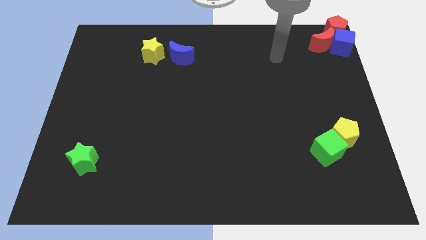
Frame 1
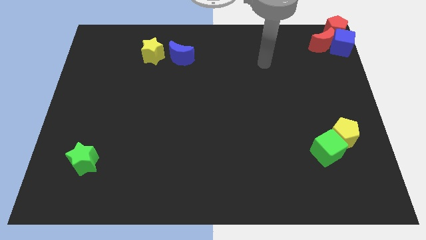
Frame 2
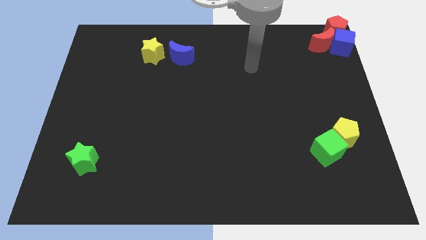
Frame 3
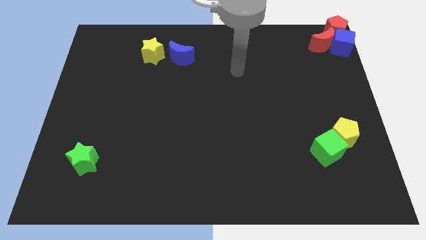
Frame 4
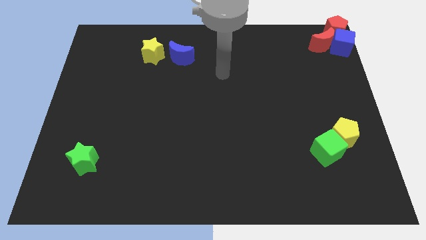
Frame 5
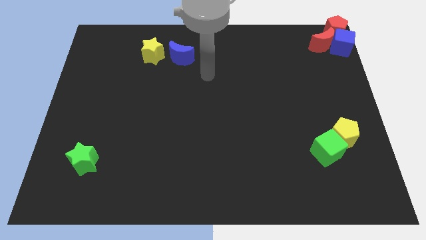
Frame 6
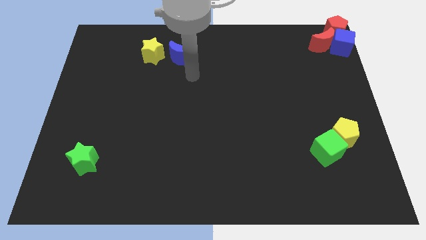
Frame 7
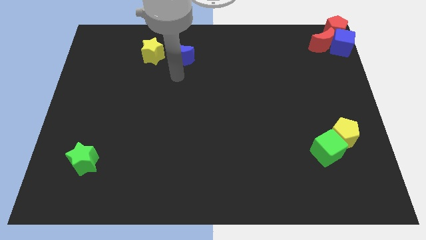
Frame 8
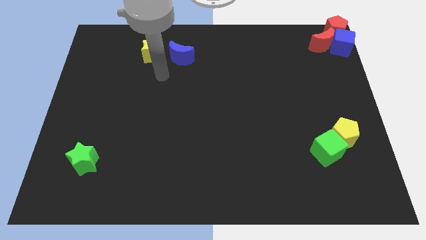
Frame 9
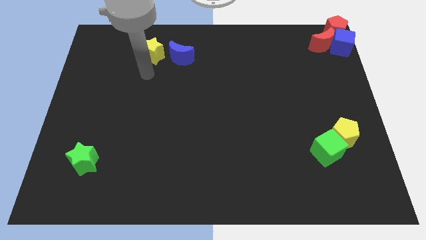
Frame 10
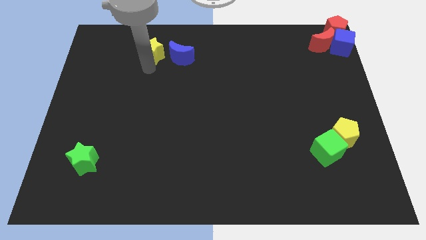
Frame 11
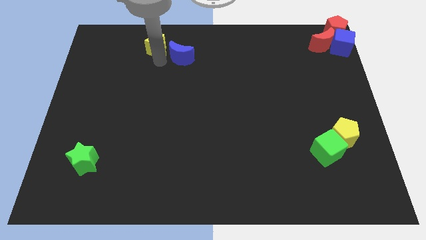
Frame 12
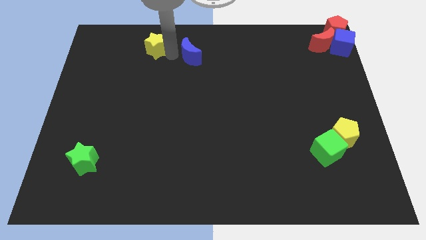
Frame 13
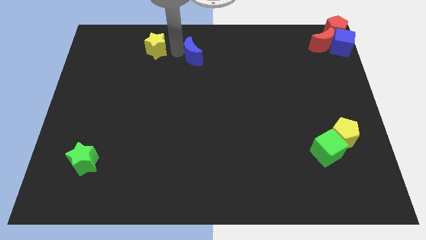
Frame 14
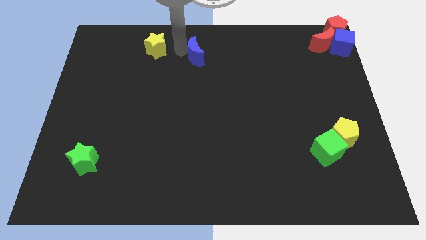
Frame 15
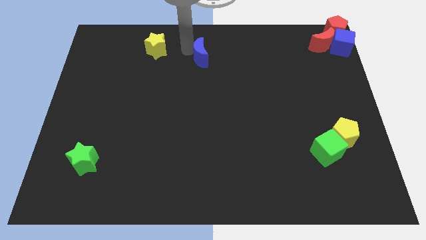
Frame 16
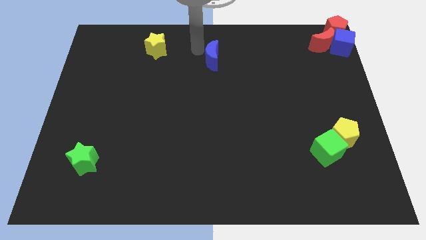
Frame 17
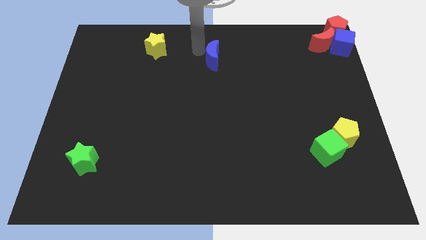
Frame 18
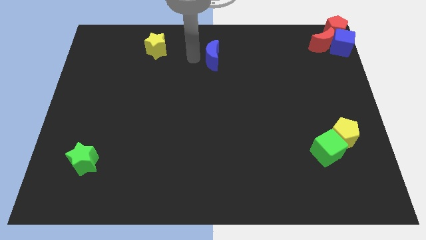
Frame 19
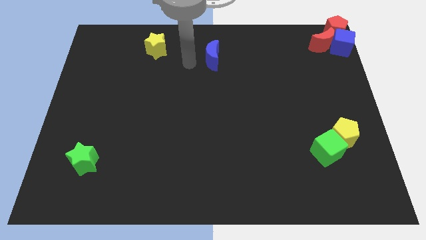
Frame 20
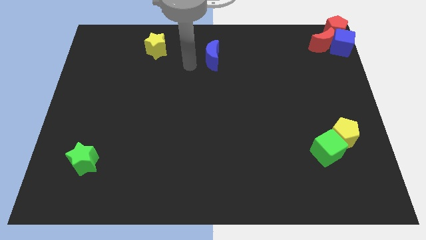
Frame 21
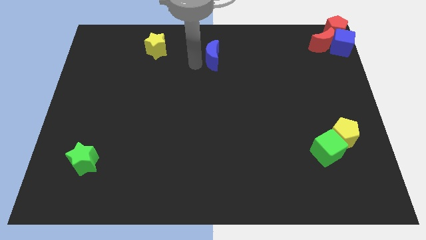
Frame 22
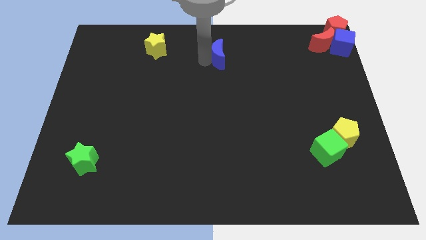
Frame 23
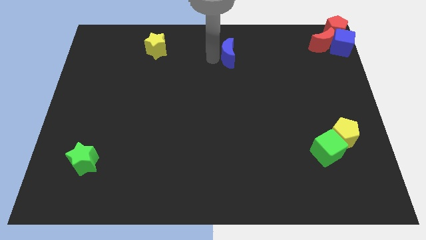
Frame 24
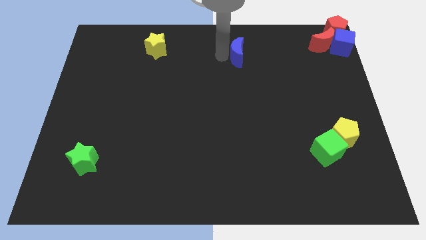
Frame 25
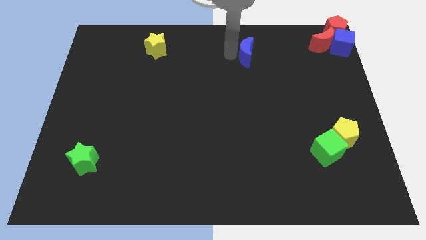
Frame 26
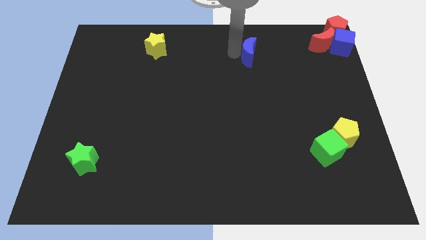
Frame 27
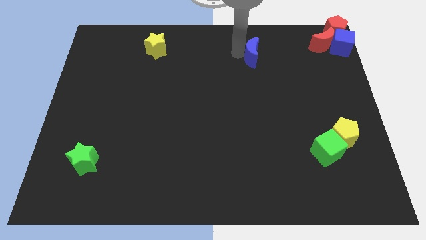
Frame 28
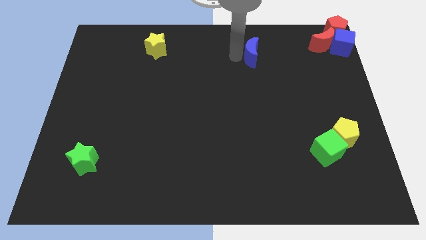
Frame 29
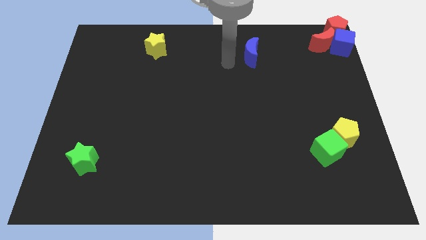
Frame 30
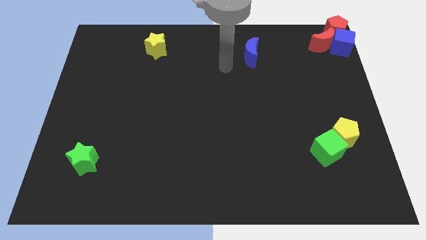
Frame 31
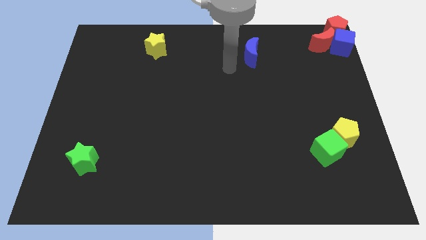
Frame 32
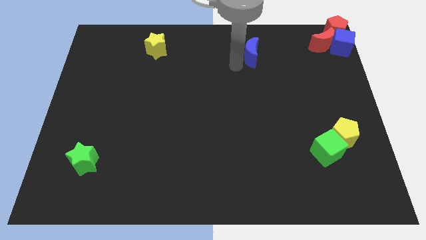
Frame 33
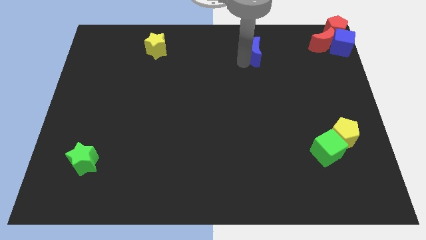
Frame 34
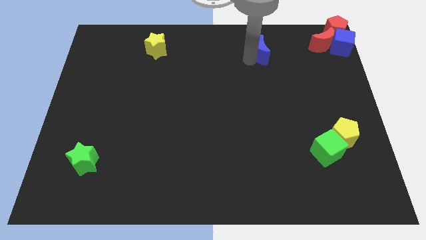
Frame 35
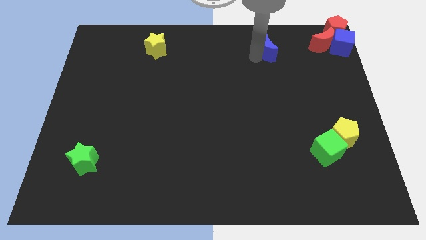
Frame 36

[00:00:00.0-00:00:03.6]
move the blue crescent towards the red crescent

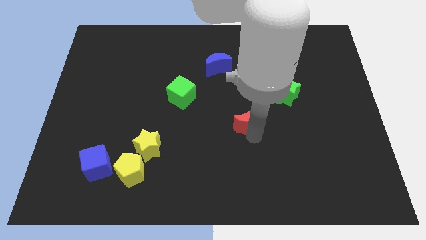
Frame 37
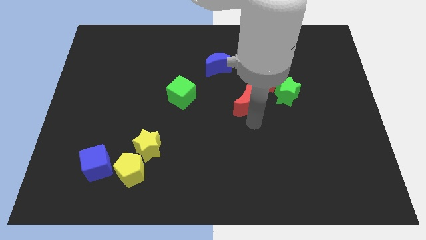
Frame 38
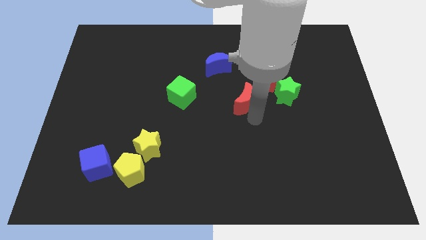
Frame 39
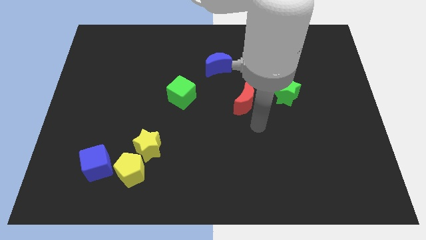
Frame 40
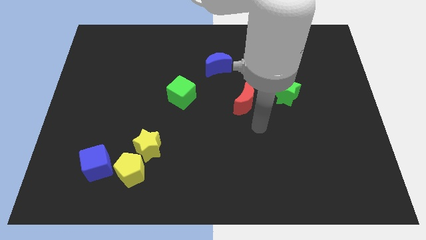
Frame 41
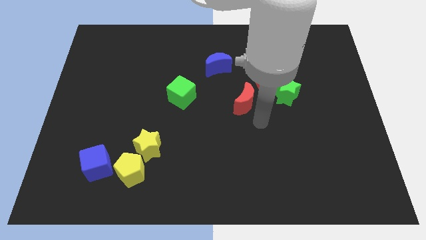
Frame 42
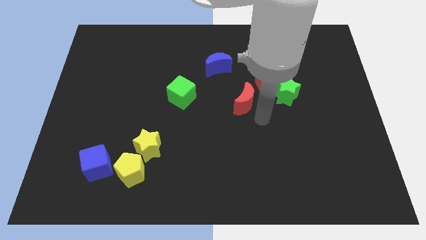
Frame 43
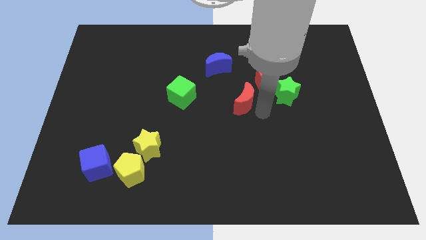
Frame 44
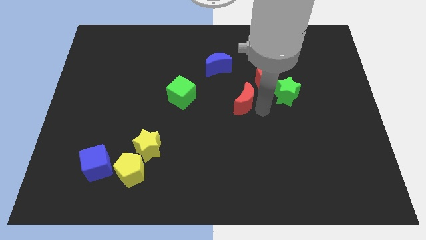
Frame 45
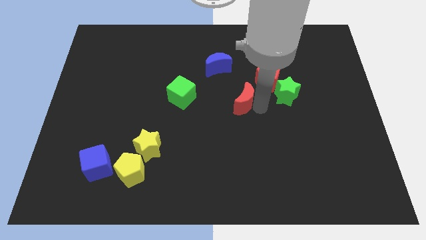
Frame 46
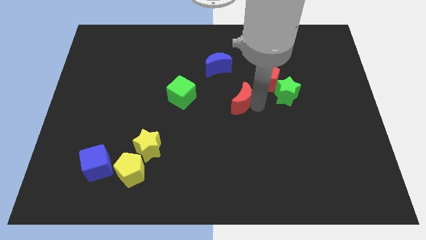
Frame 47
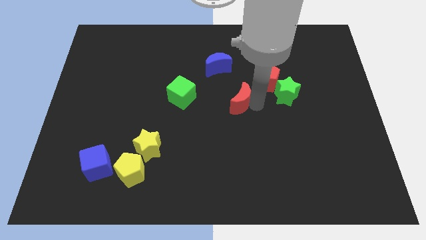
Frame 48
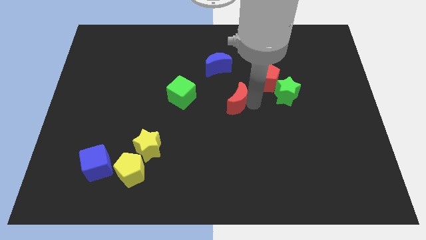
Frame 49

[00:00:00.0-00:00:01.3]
move the red moon to the right of the green cube

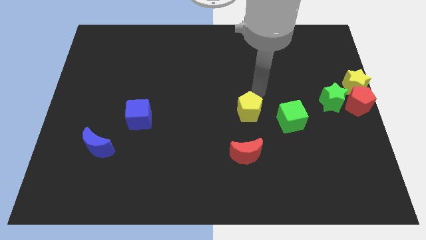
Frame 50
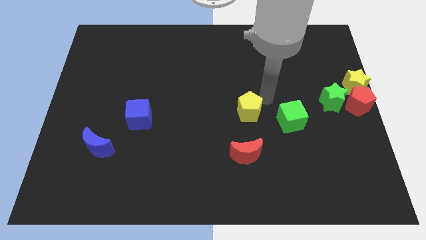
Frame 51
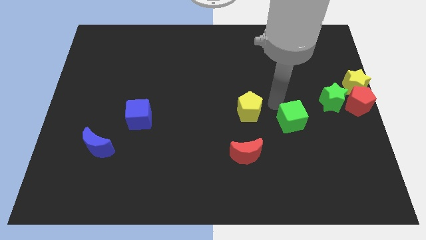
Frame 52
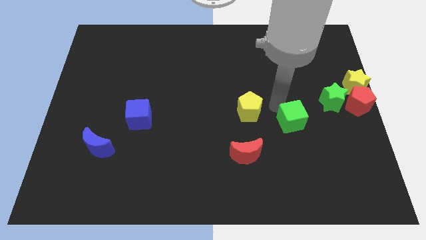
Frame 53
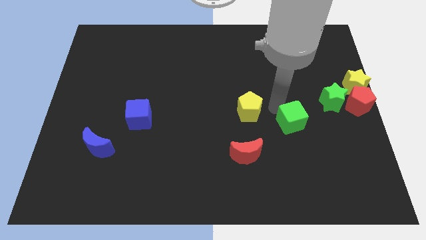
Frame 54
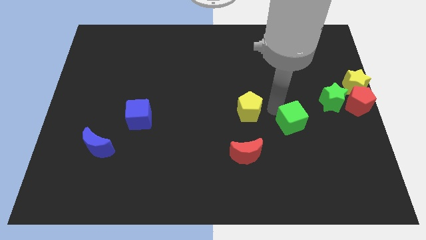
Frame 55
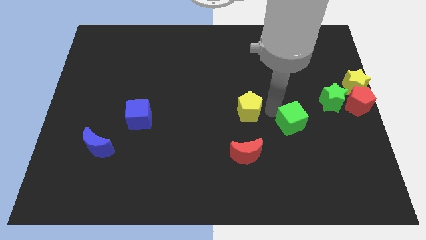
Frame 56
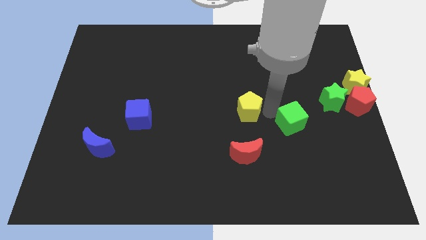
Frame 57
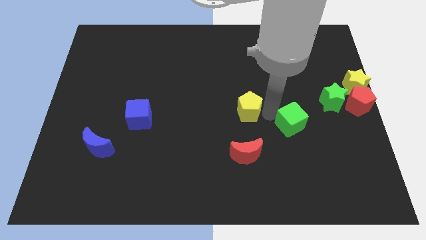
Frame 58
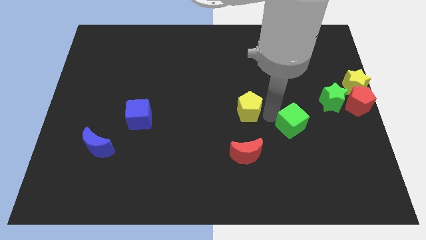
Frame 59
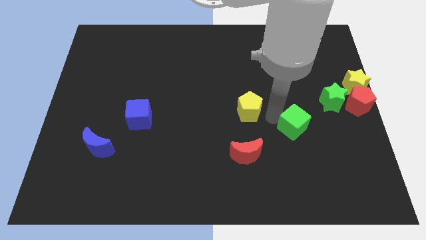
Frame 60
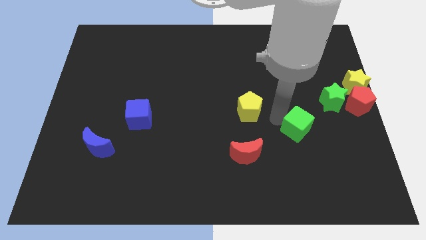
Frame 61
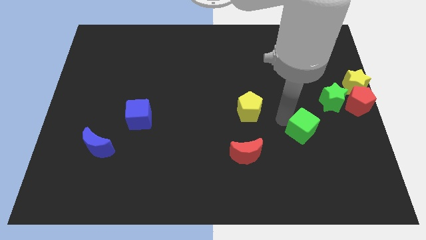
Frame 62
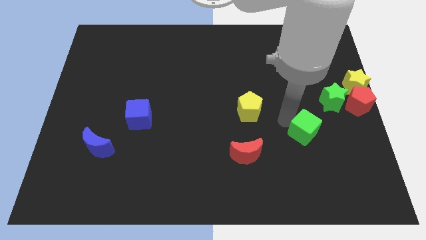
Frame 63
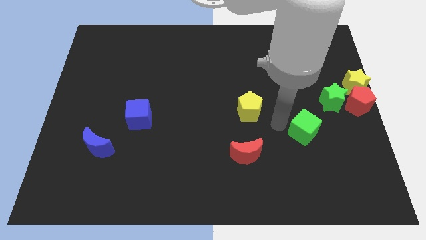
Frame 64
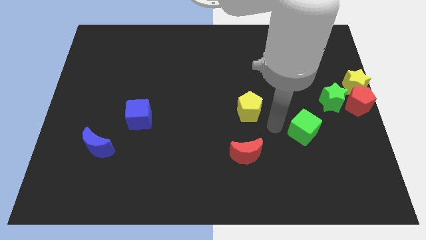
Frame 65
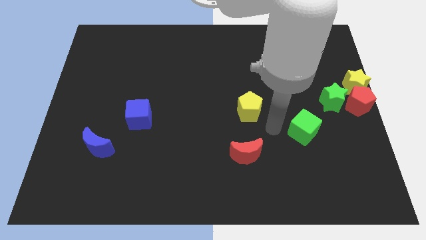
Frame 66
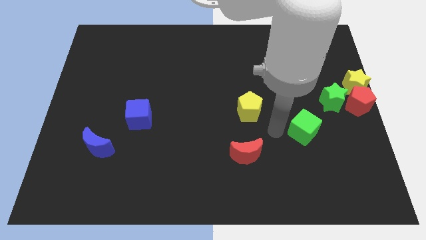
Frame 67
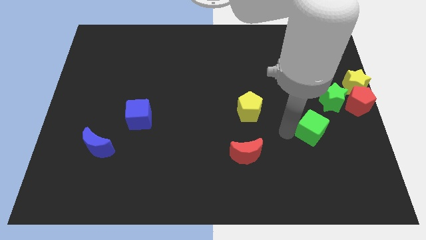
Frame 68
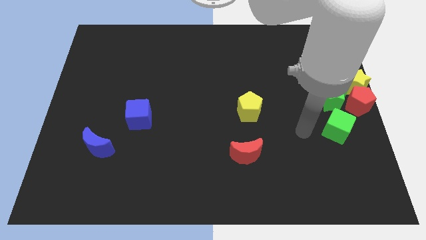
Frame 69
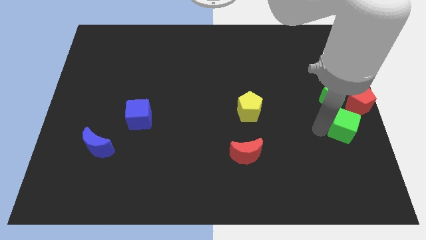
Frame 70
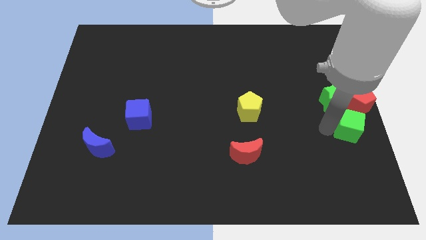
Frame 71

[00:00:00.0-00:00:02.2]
push green cube behind the red pentagon

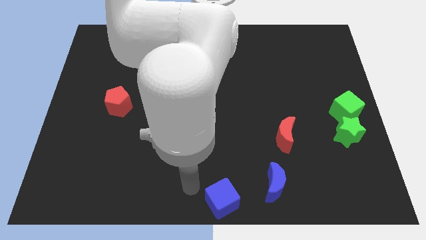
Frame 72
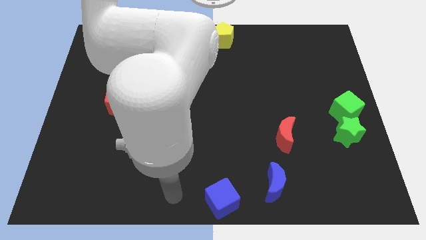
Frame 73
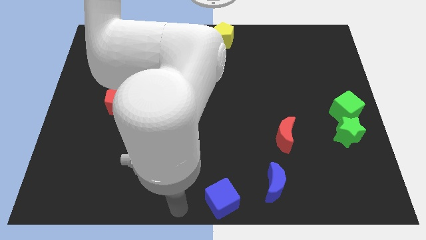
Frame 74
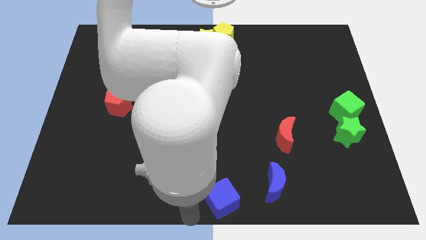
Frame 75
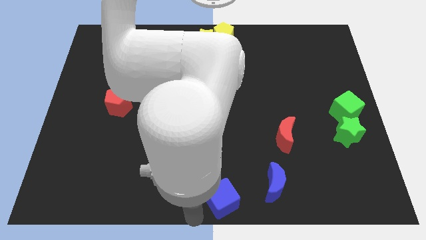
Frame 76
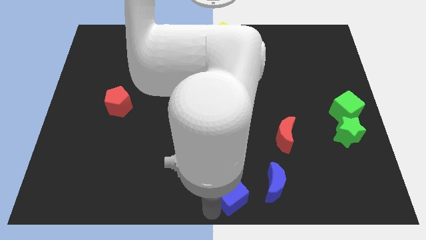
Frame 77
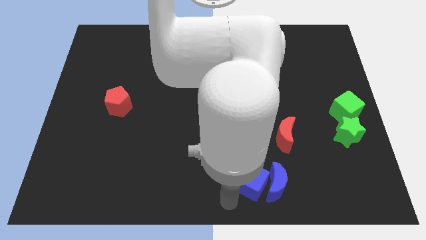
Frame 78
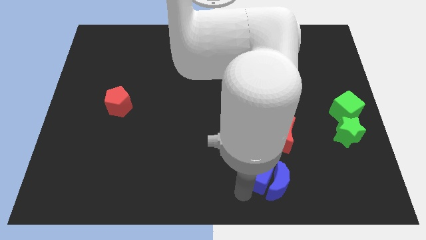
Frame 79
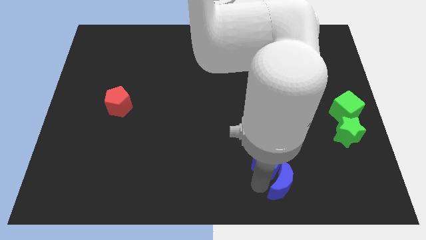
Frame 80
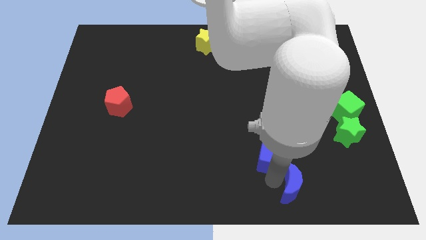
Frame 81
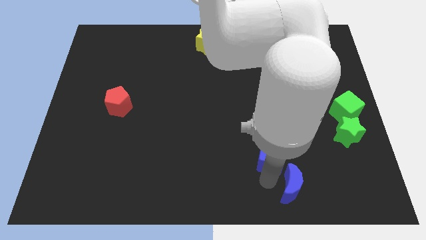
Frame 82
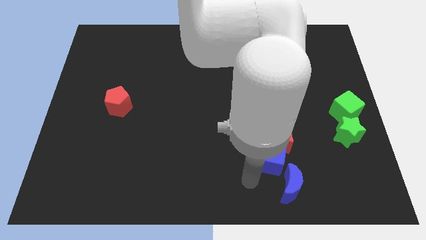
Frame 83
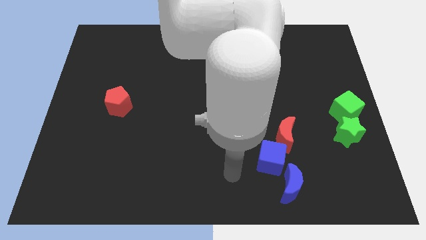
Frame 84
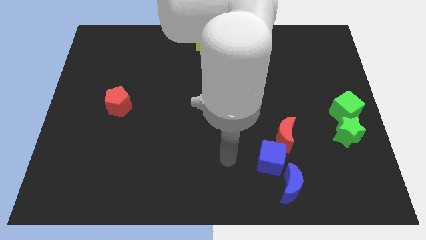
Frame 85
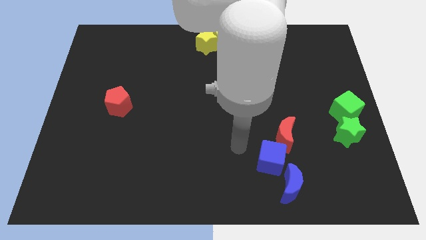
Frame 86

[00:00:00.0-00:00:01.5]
push the blue cube into the blue moon

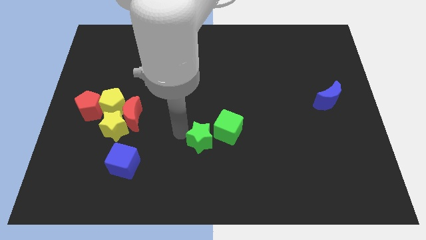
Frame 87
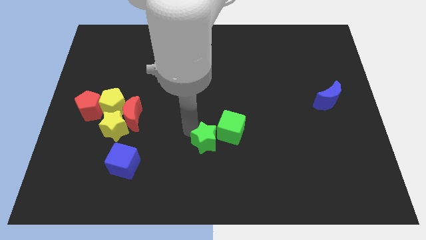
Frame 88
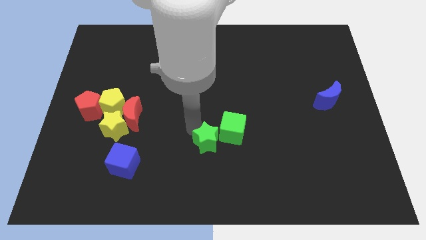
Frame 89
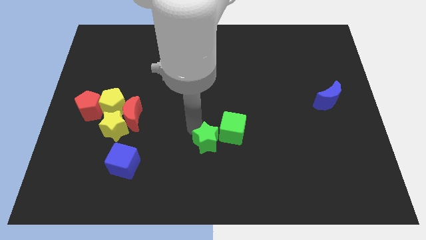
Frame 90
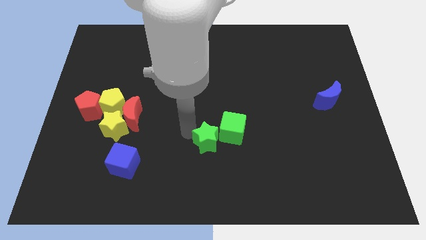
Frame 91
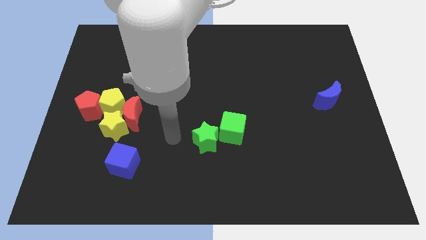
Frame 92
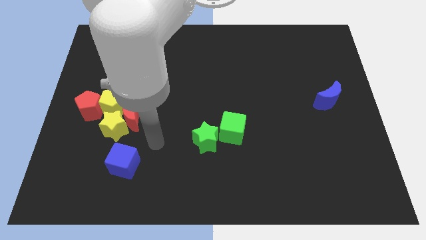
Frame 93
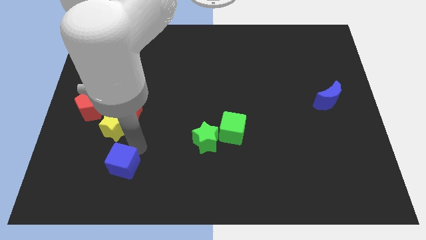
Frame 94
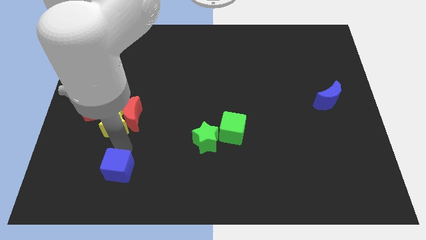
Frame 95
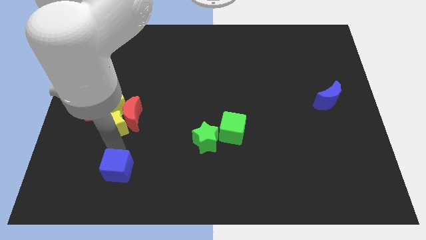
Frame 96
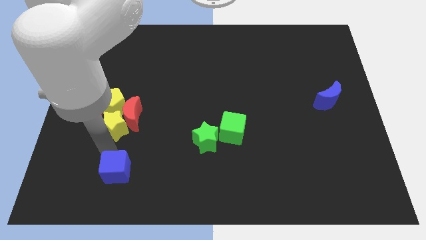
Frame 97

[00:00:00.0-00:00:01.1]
move the blue block towards the bottom left of the board
